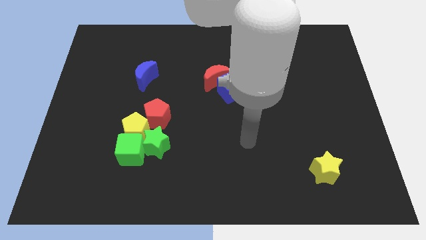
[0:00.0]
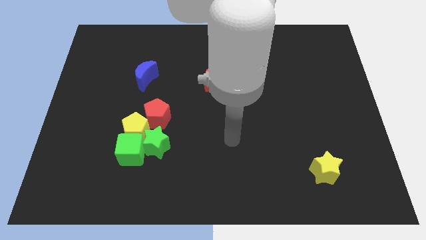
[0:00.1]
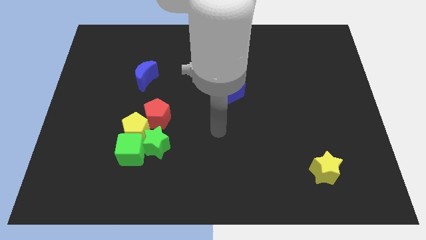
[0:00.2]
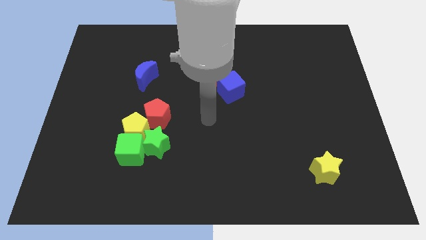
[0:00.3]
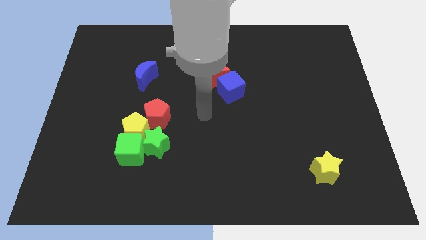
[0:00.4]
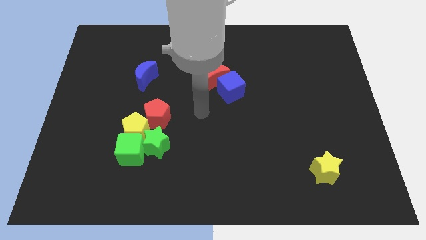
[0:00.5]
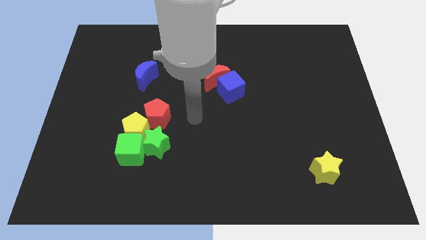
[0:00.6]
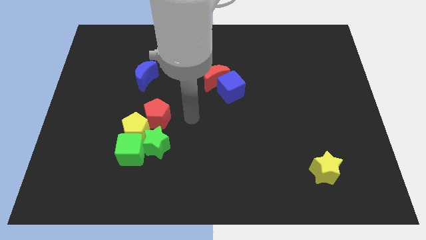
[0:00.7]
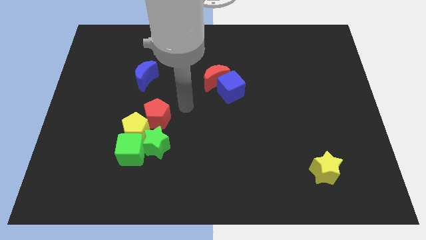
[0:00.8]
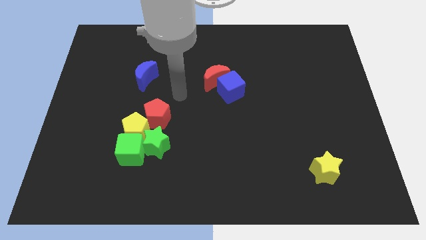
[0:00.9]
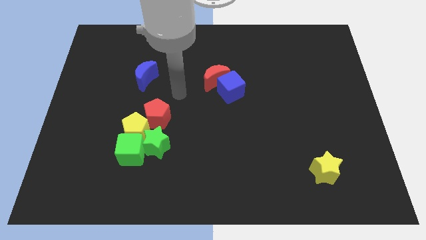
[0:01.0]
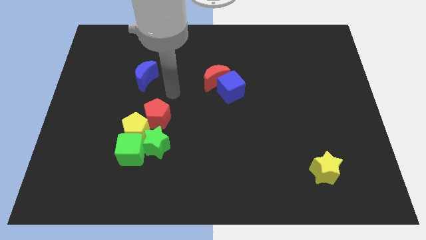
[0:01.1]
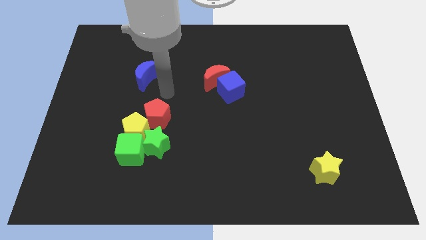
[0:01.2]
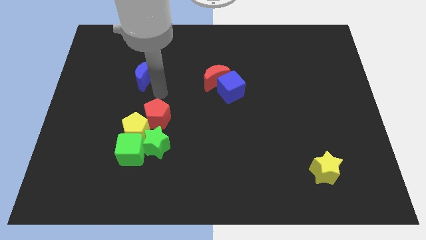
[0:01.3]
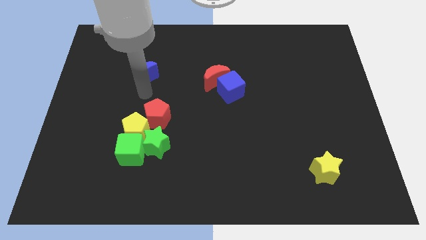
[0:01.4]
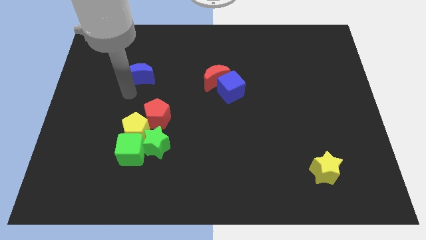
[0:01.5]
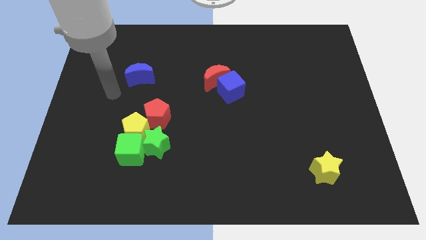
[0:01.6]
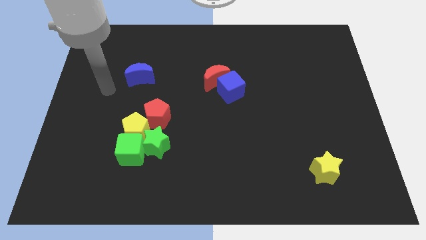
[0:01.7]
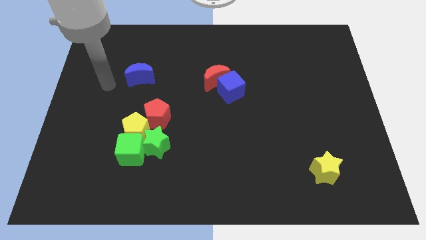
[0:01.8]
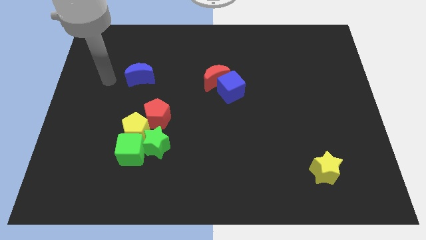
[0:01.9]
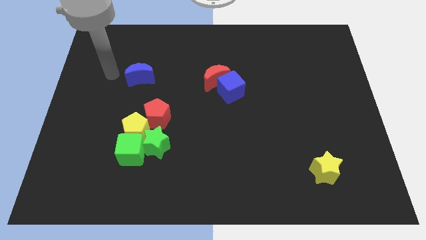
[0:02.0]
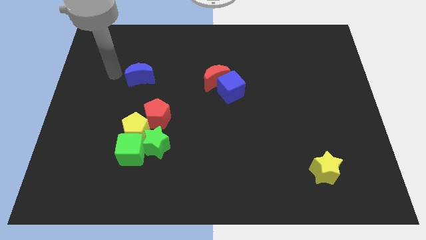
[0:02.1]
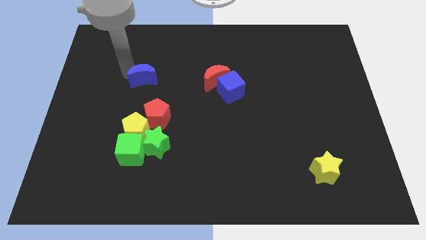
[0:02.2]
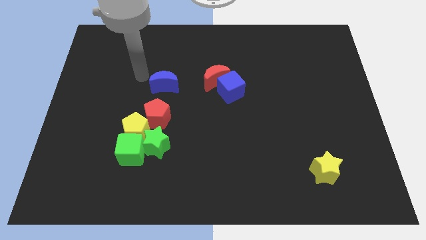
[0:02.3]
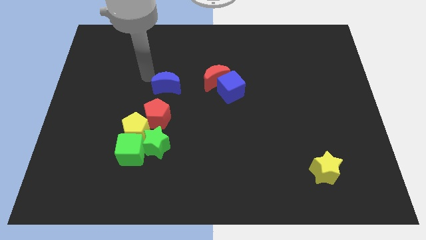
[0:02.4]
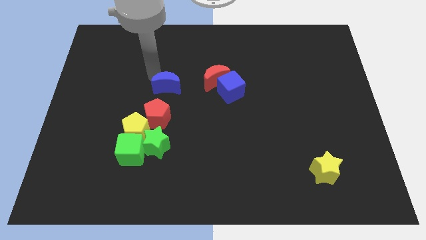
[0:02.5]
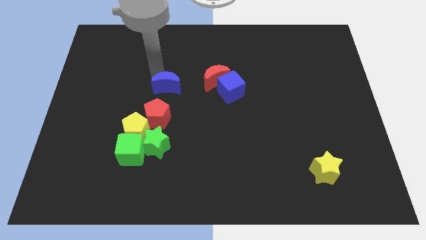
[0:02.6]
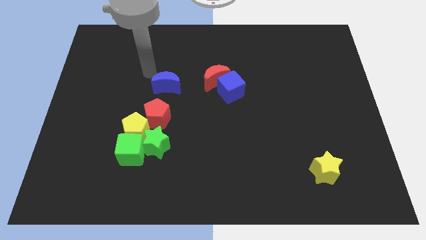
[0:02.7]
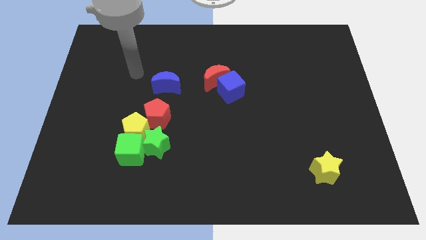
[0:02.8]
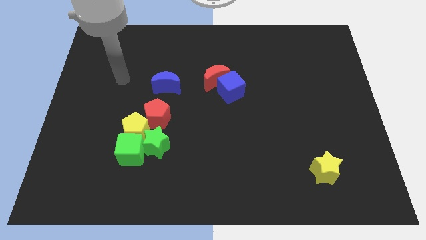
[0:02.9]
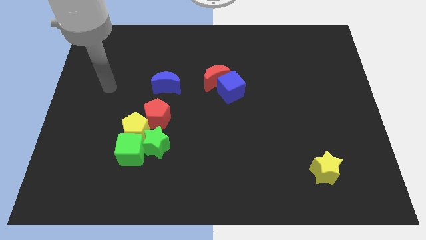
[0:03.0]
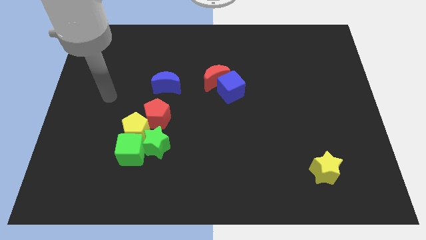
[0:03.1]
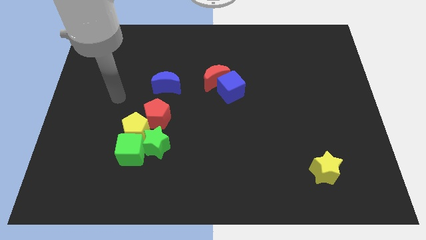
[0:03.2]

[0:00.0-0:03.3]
place the blue moon towards the top side of the red pentagon

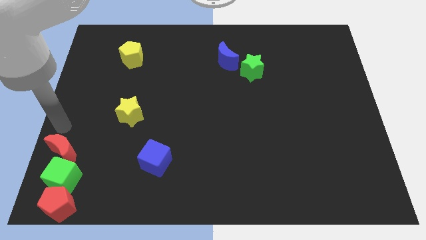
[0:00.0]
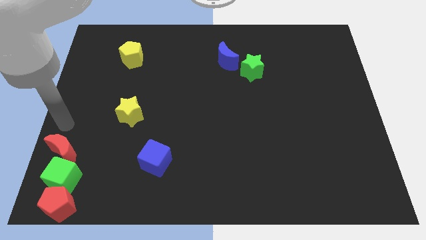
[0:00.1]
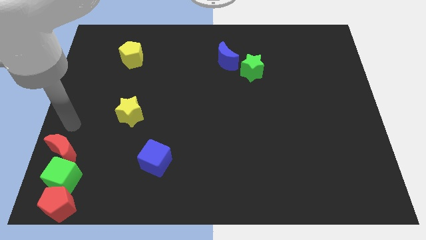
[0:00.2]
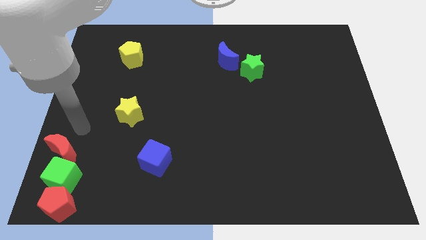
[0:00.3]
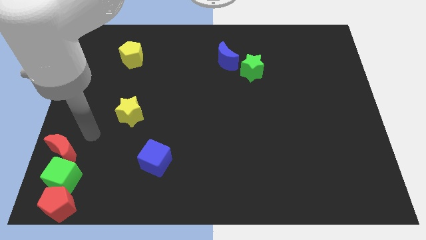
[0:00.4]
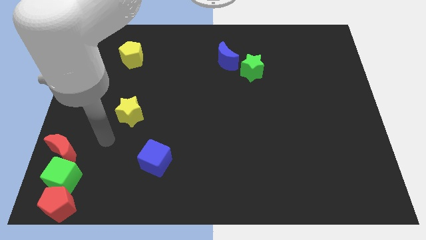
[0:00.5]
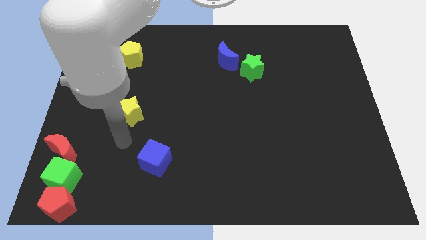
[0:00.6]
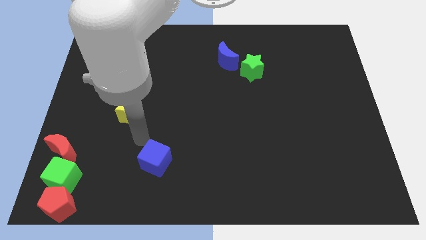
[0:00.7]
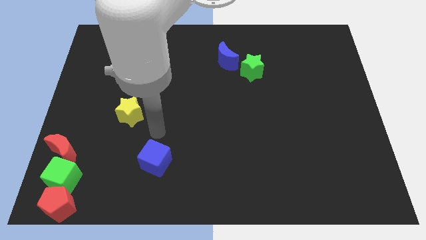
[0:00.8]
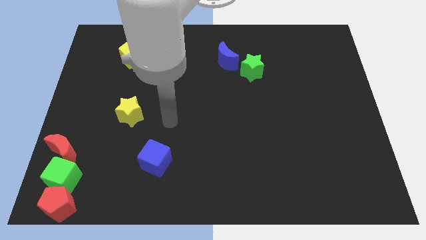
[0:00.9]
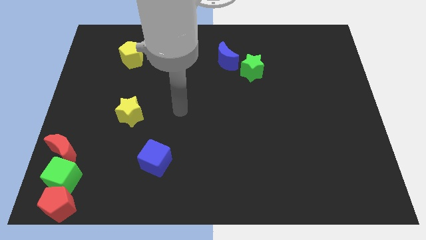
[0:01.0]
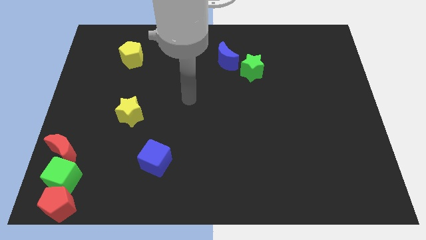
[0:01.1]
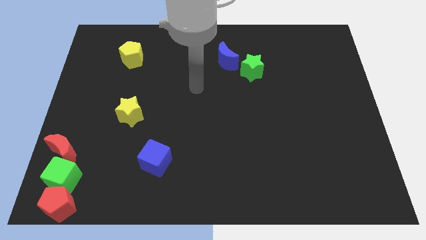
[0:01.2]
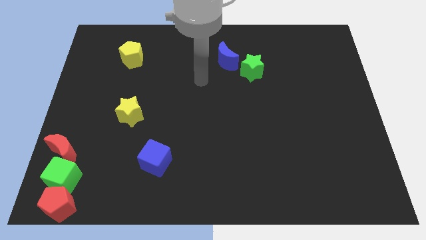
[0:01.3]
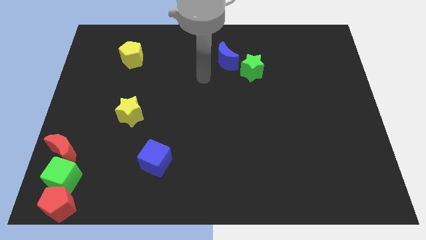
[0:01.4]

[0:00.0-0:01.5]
move your arm away from the red moon

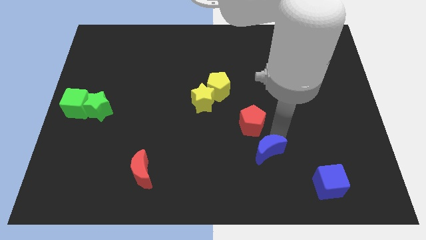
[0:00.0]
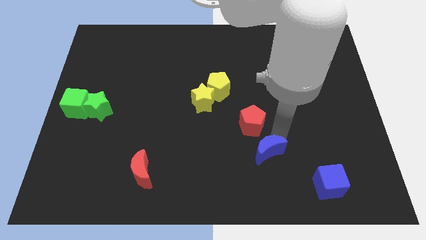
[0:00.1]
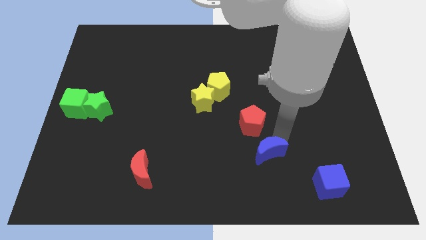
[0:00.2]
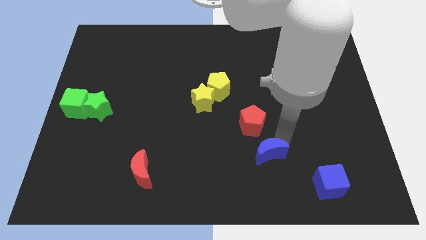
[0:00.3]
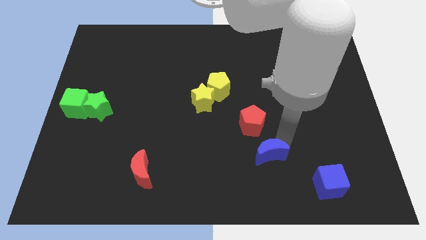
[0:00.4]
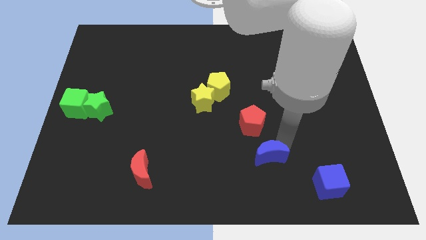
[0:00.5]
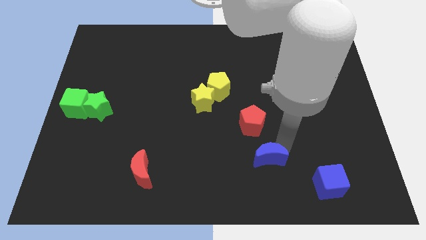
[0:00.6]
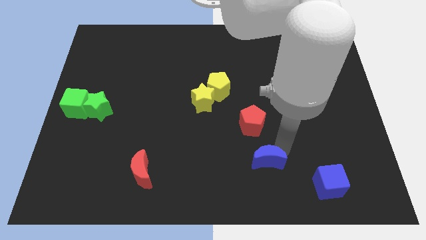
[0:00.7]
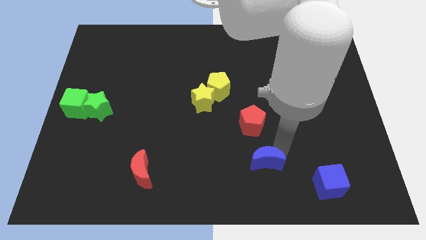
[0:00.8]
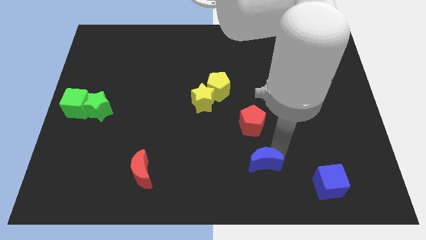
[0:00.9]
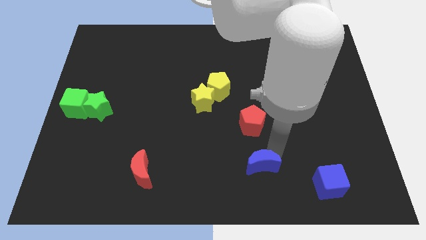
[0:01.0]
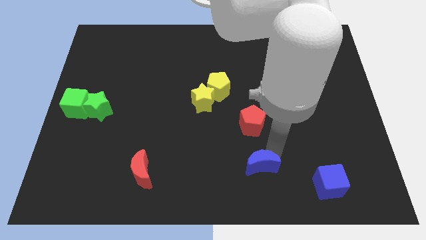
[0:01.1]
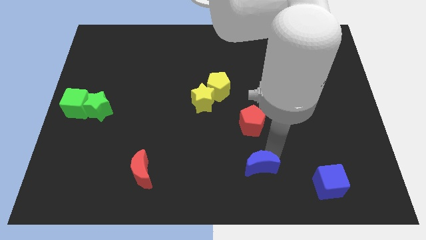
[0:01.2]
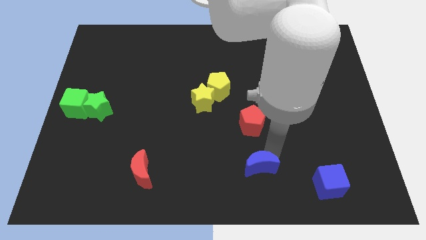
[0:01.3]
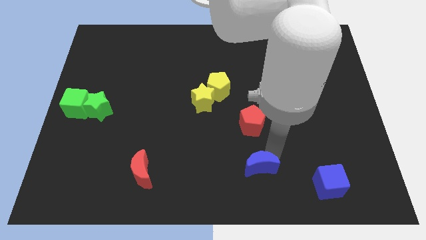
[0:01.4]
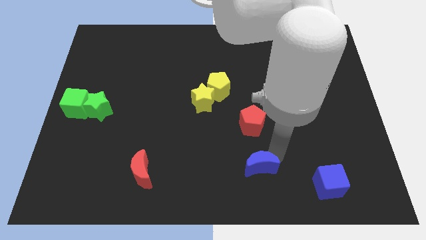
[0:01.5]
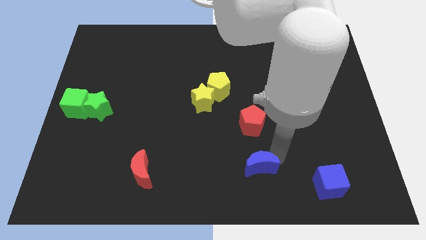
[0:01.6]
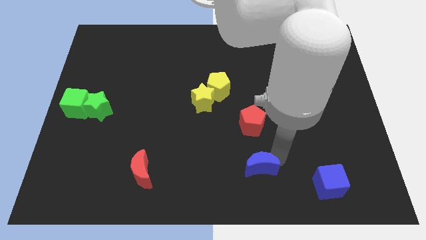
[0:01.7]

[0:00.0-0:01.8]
place the blue crescent below the red pentagon

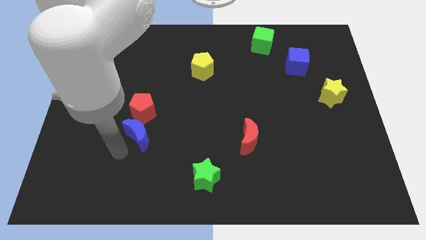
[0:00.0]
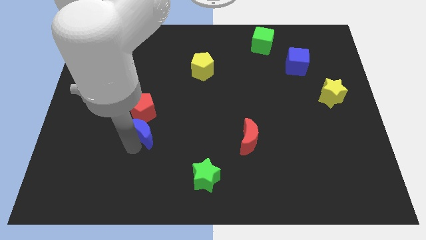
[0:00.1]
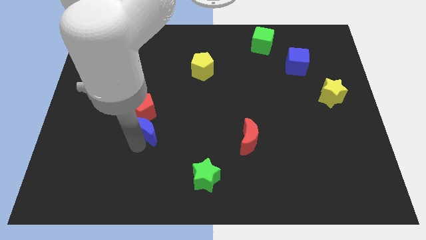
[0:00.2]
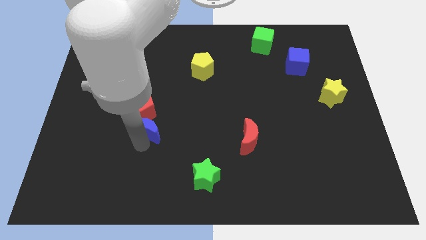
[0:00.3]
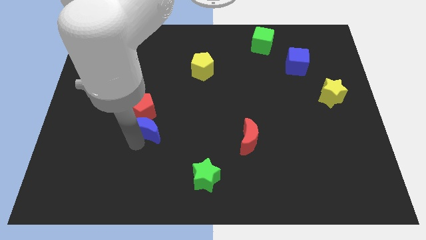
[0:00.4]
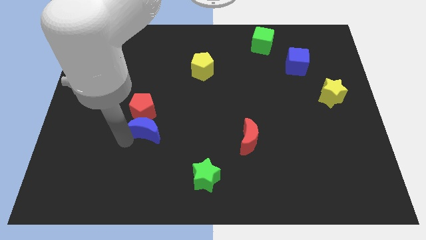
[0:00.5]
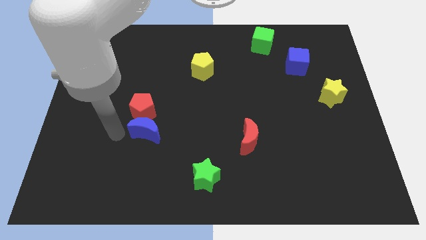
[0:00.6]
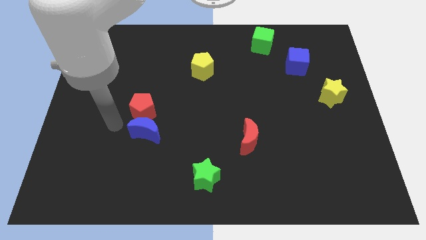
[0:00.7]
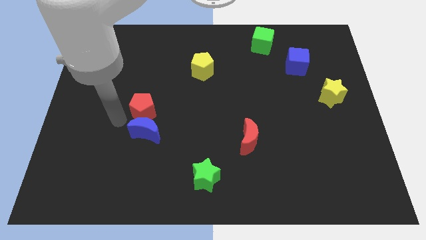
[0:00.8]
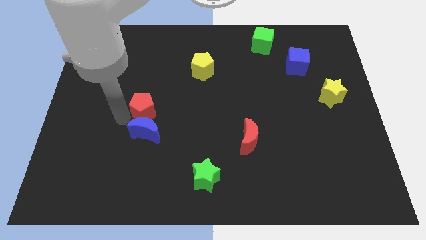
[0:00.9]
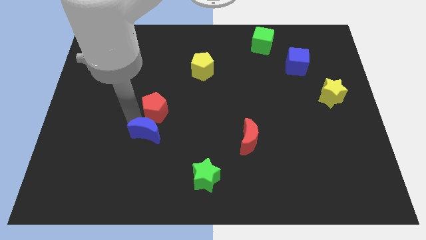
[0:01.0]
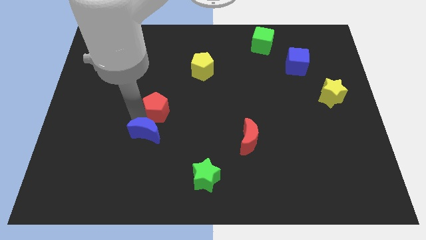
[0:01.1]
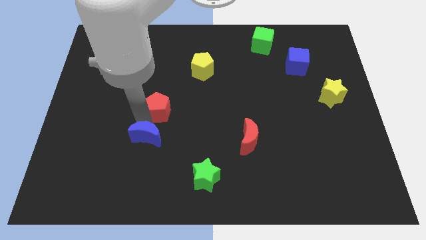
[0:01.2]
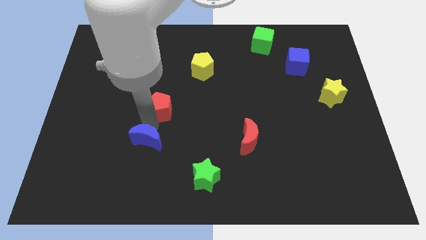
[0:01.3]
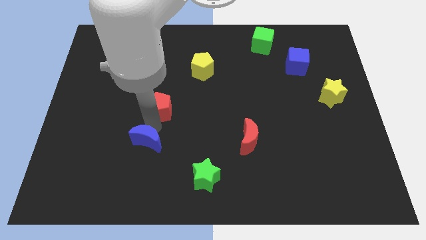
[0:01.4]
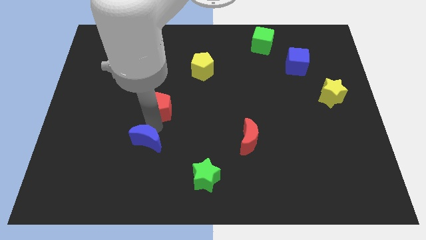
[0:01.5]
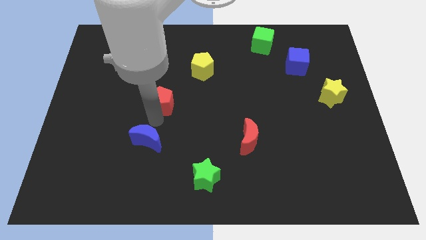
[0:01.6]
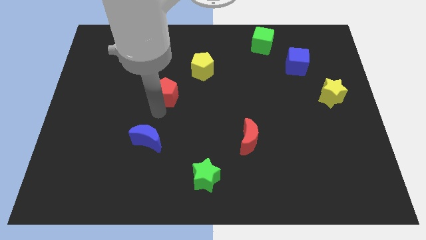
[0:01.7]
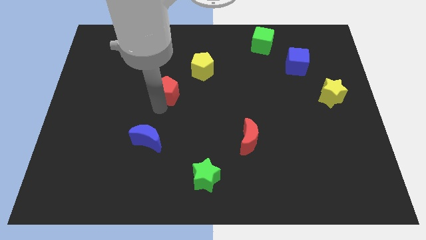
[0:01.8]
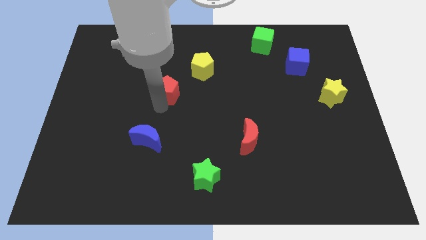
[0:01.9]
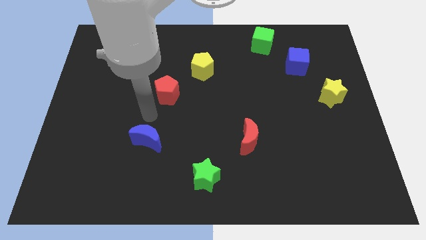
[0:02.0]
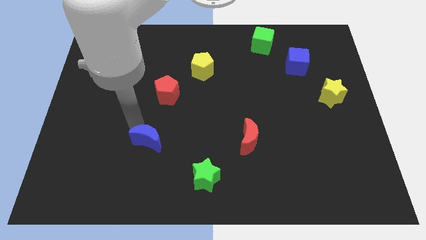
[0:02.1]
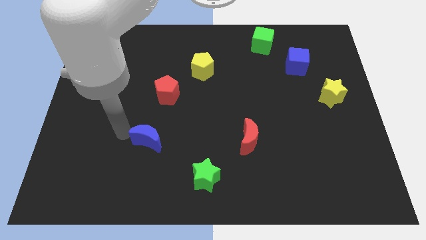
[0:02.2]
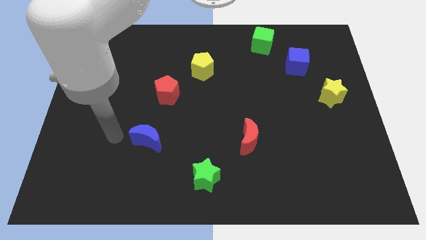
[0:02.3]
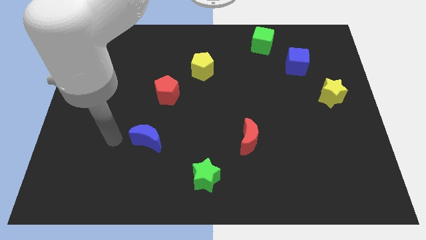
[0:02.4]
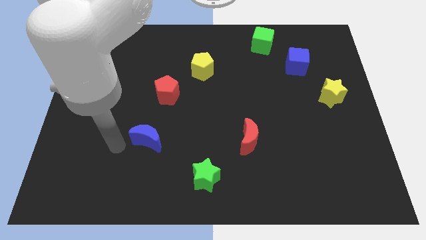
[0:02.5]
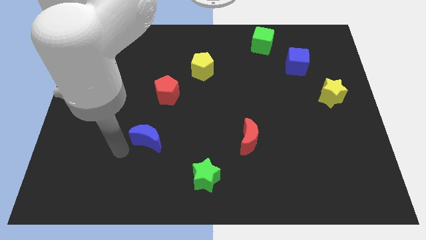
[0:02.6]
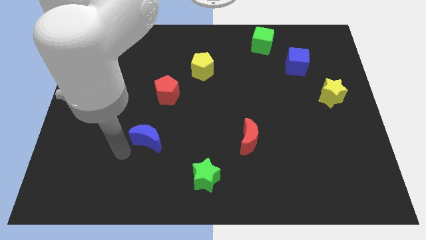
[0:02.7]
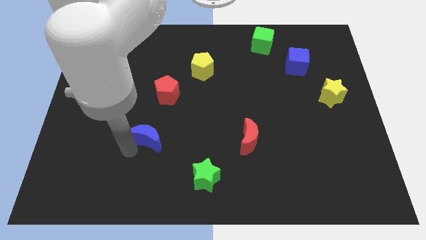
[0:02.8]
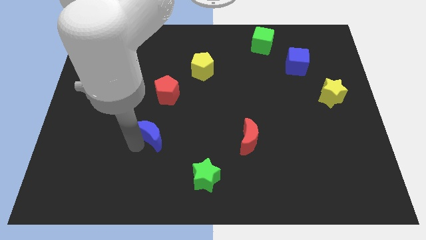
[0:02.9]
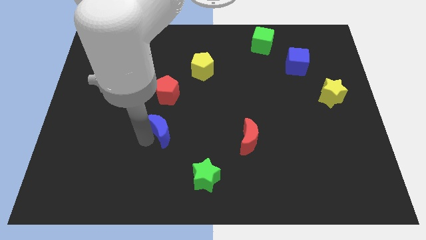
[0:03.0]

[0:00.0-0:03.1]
separate the red pentagon from blue crescent
